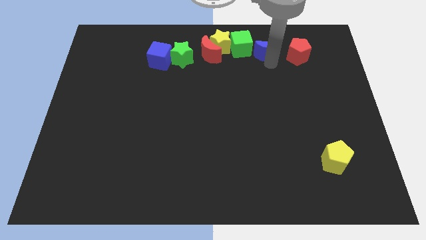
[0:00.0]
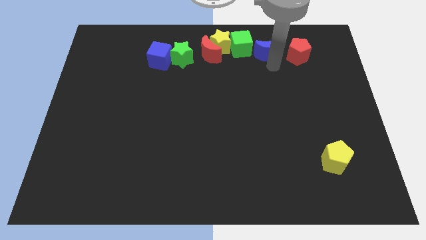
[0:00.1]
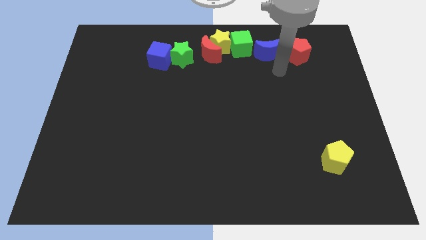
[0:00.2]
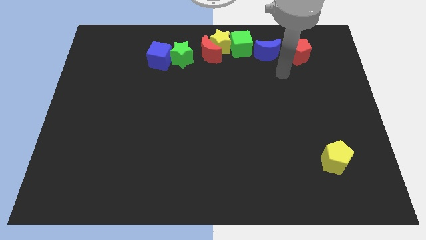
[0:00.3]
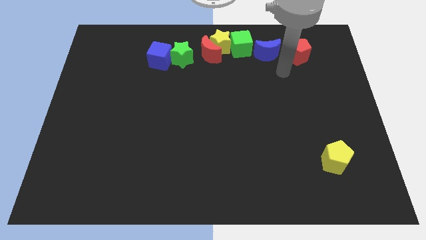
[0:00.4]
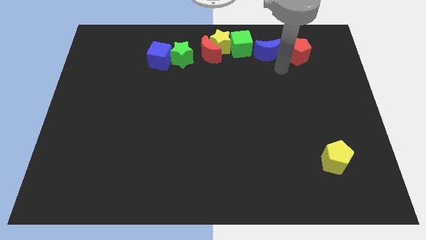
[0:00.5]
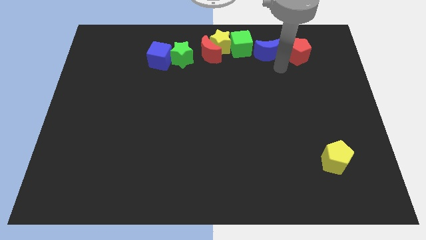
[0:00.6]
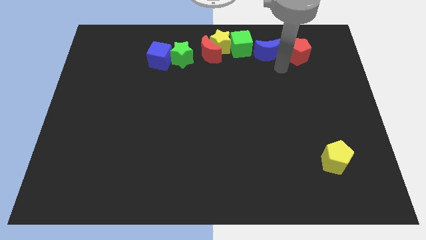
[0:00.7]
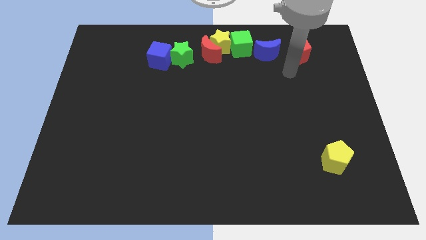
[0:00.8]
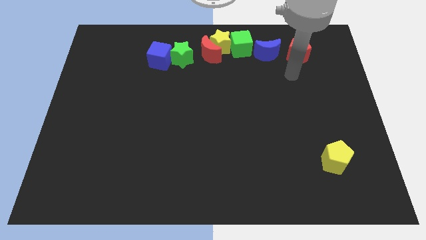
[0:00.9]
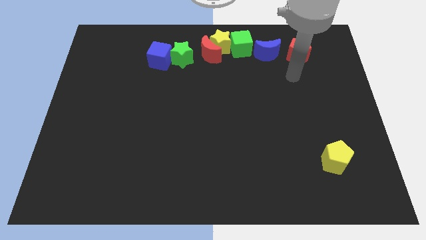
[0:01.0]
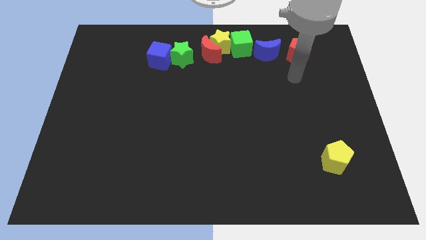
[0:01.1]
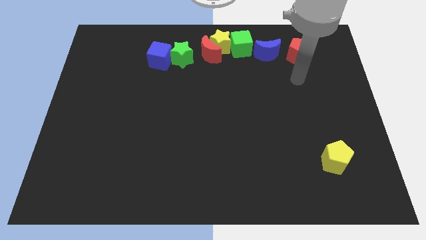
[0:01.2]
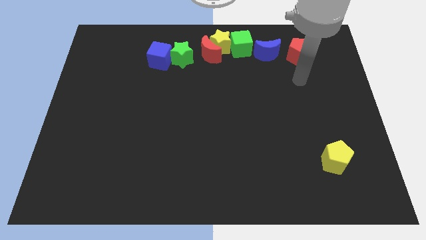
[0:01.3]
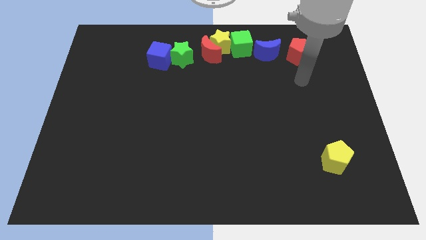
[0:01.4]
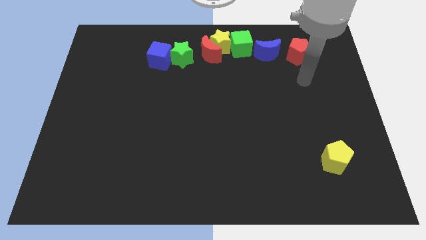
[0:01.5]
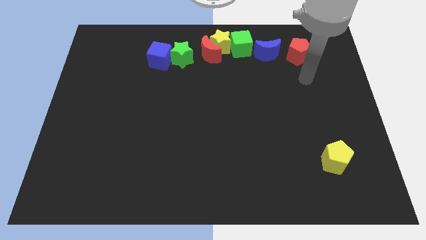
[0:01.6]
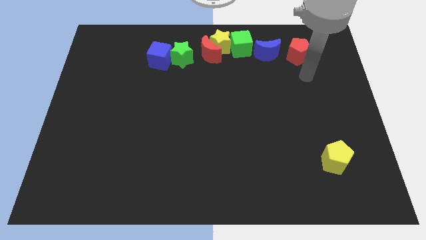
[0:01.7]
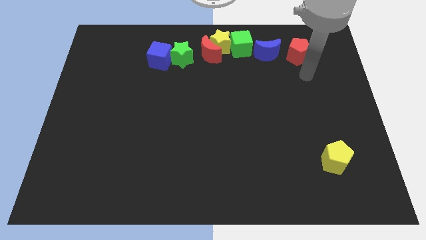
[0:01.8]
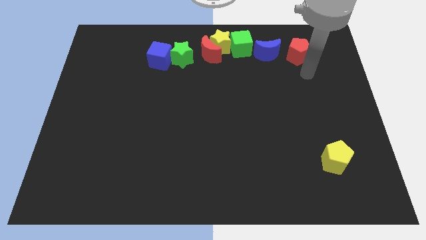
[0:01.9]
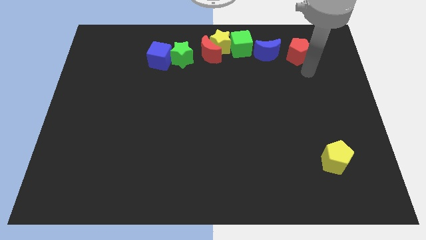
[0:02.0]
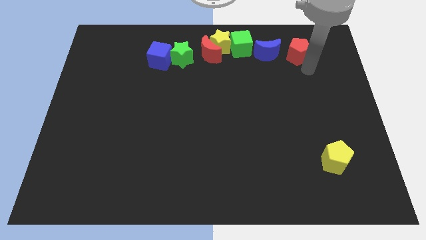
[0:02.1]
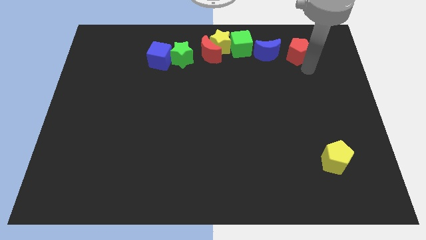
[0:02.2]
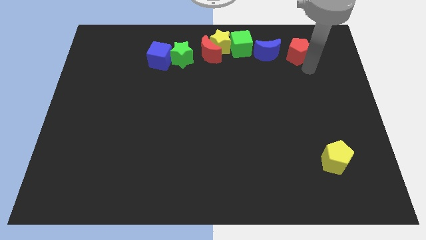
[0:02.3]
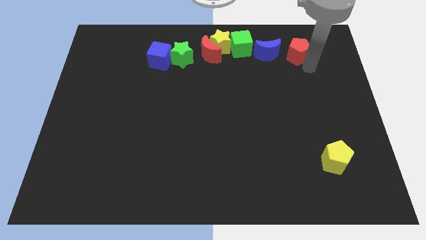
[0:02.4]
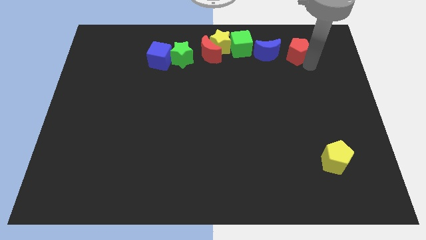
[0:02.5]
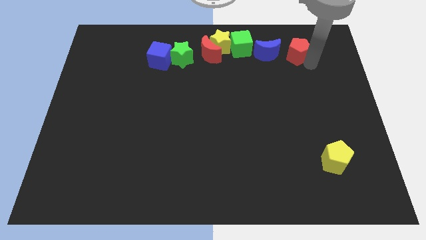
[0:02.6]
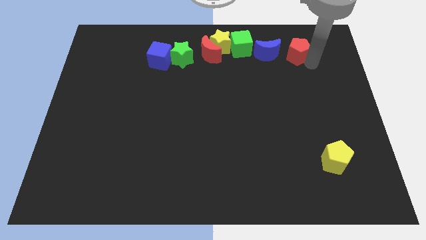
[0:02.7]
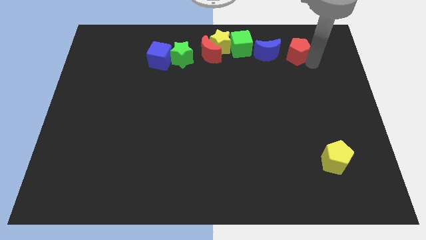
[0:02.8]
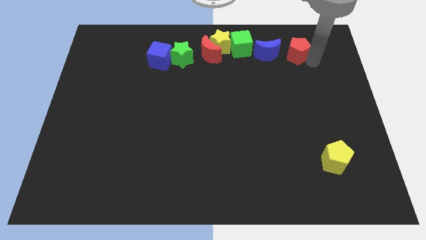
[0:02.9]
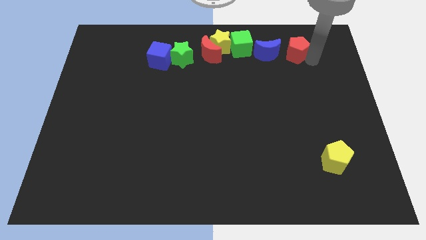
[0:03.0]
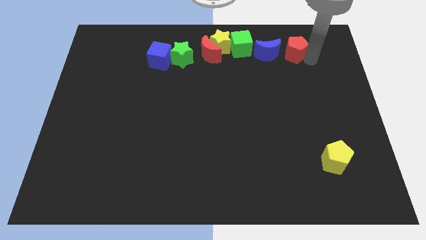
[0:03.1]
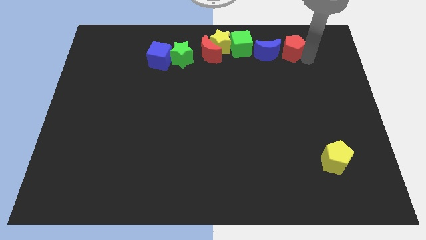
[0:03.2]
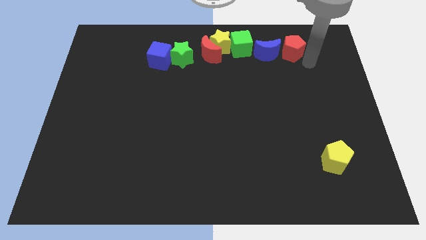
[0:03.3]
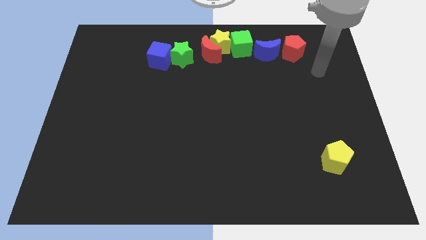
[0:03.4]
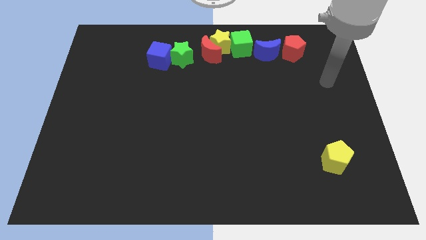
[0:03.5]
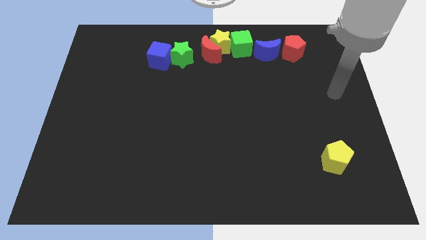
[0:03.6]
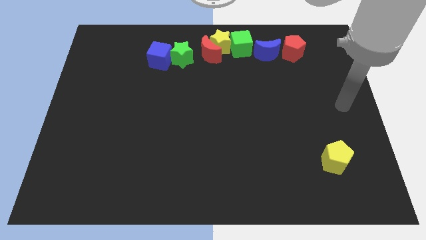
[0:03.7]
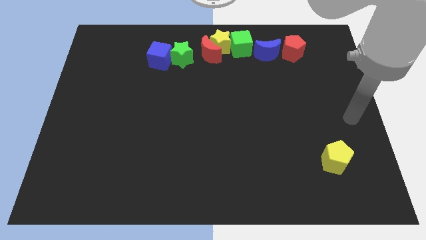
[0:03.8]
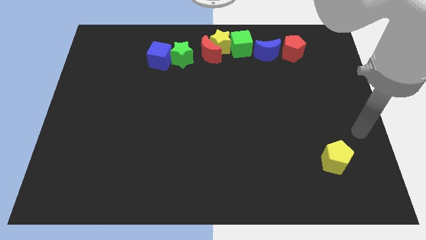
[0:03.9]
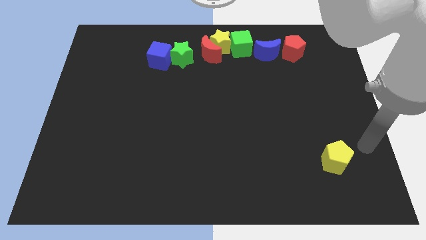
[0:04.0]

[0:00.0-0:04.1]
slightly move the red pentagon to the right of the blue crescent

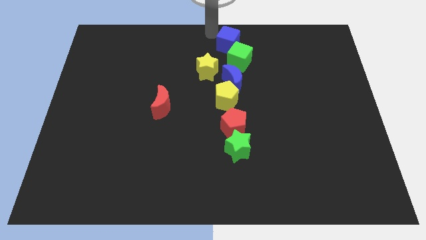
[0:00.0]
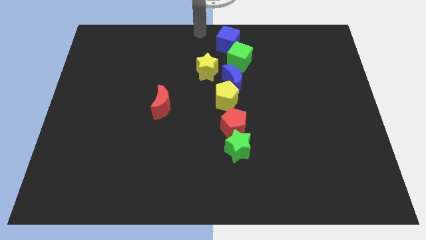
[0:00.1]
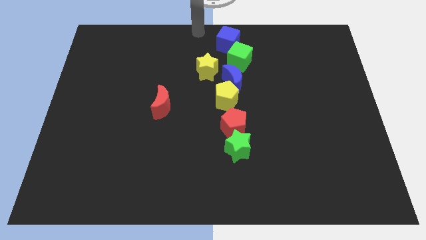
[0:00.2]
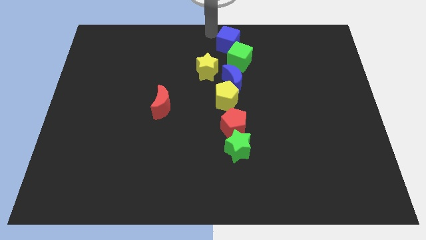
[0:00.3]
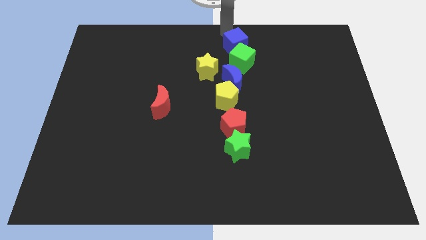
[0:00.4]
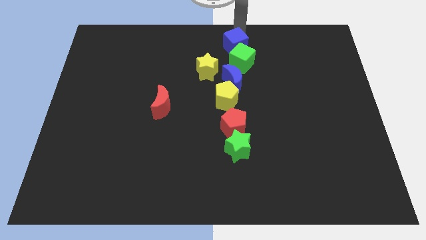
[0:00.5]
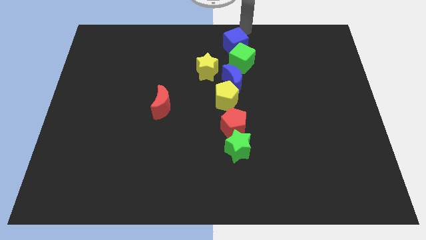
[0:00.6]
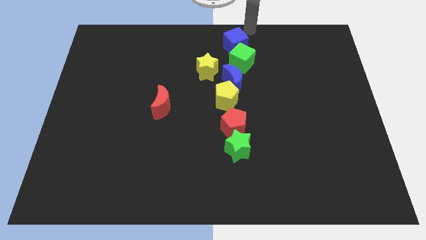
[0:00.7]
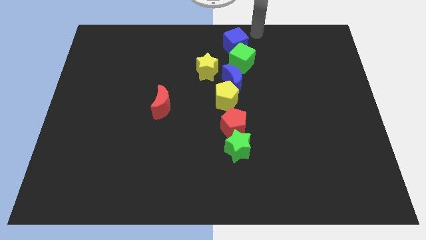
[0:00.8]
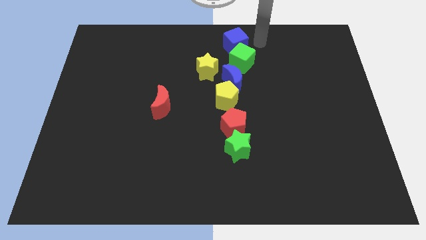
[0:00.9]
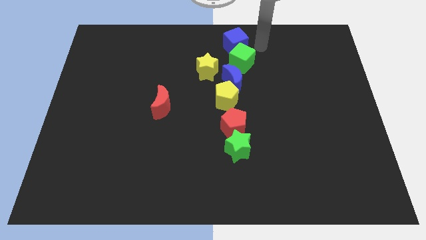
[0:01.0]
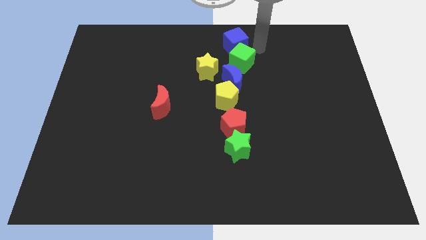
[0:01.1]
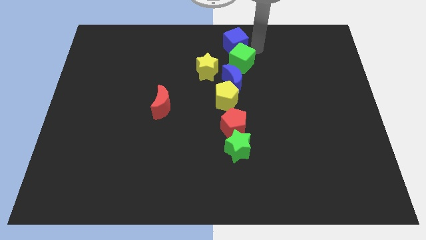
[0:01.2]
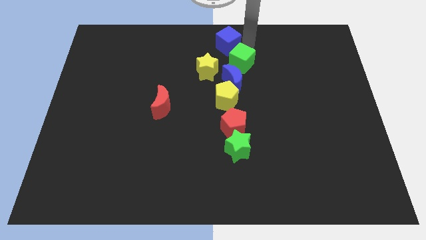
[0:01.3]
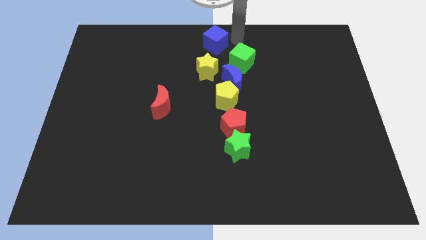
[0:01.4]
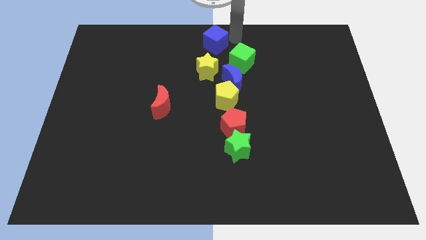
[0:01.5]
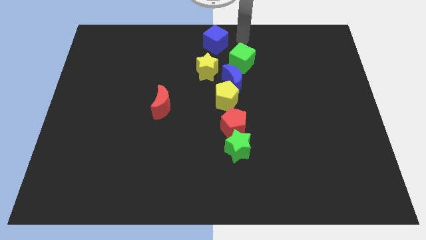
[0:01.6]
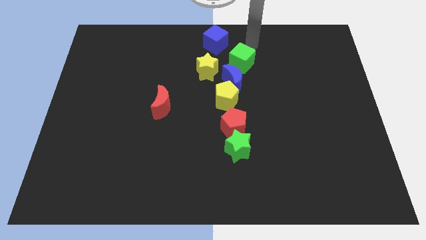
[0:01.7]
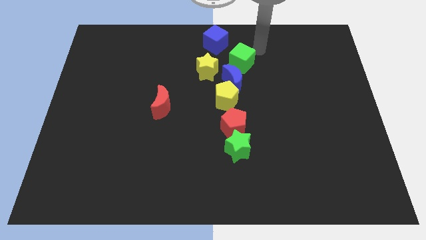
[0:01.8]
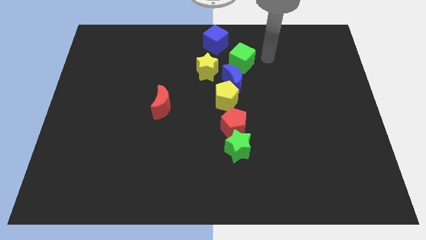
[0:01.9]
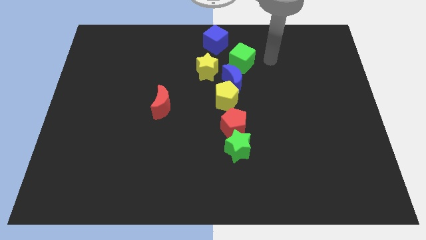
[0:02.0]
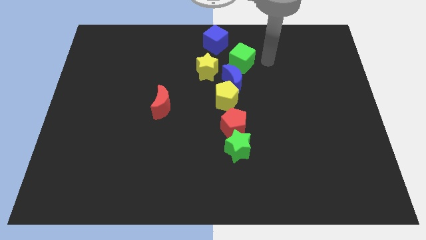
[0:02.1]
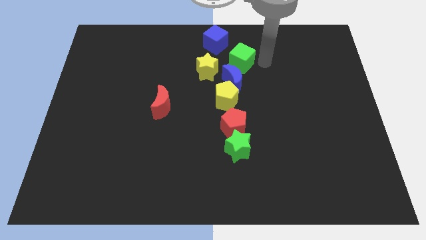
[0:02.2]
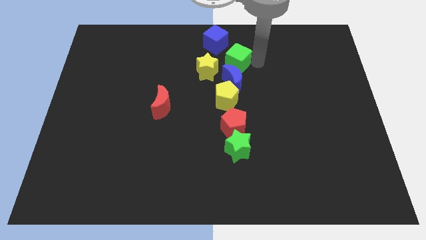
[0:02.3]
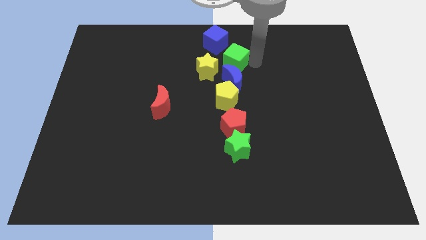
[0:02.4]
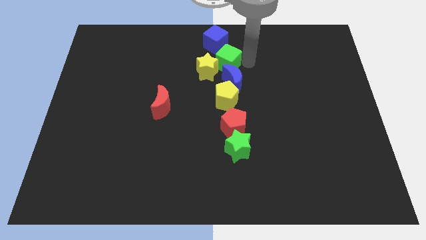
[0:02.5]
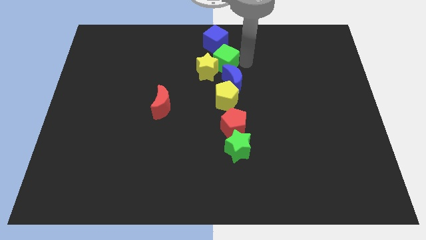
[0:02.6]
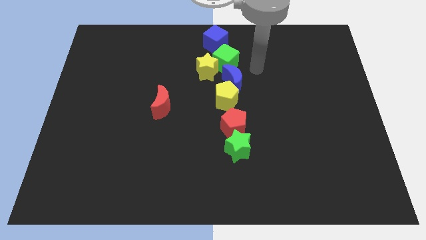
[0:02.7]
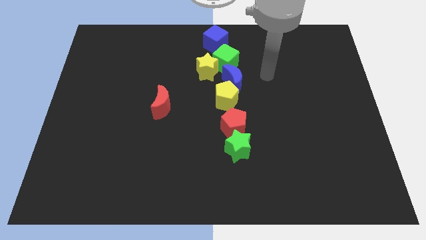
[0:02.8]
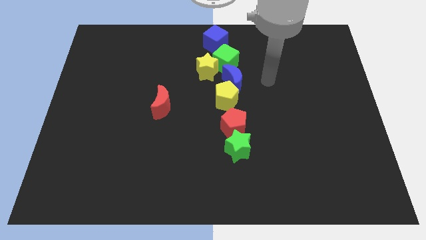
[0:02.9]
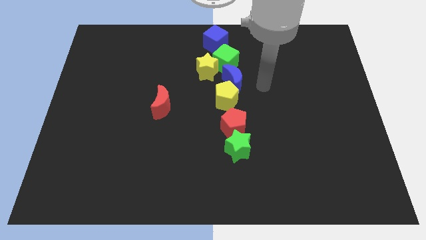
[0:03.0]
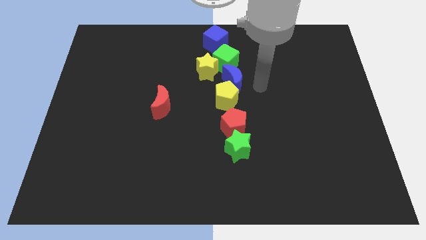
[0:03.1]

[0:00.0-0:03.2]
move the blue cube and the green cube to the left slightly

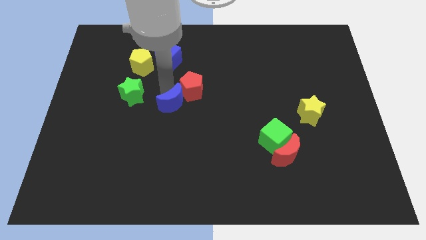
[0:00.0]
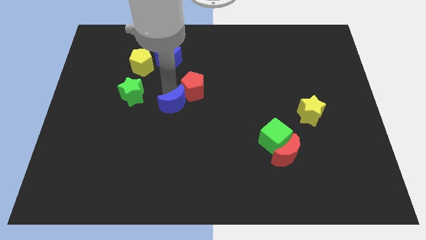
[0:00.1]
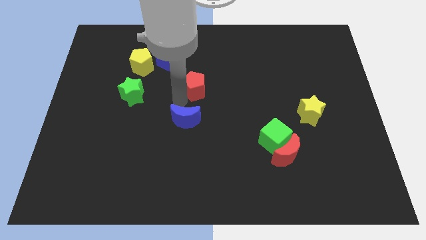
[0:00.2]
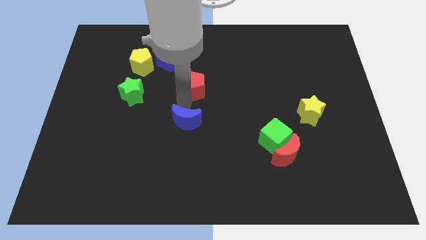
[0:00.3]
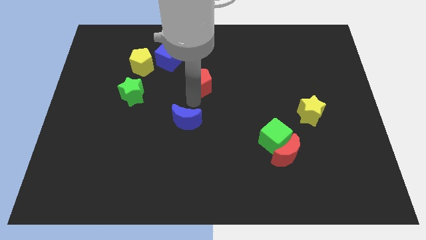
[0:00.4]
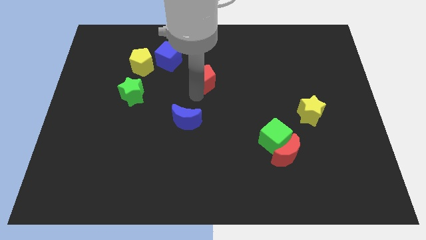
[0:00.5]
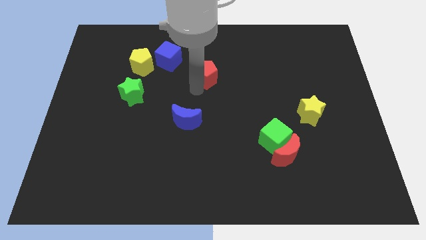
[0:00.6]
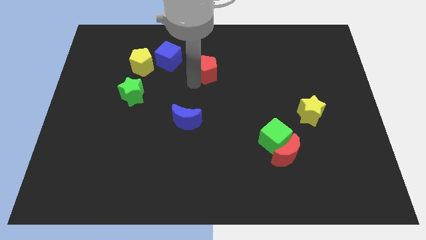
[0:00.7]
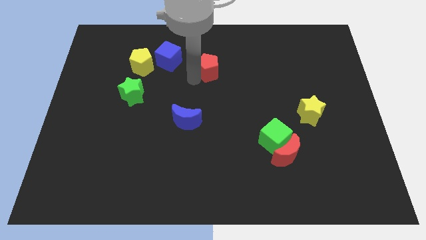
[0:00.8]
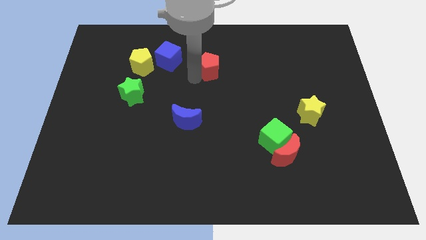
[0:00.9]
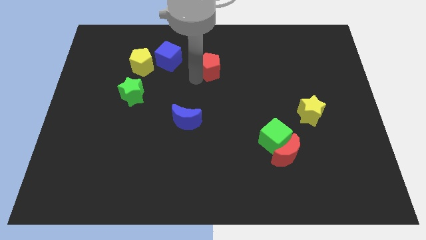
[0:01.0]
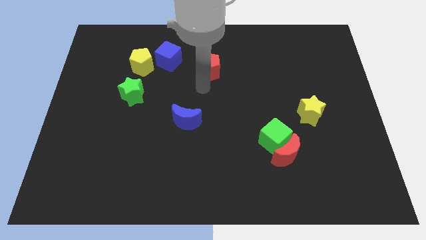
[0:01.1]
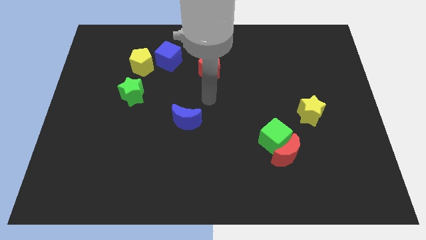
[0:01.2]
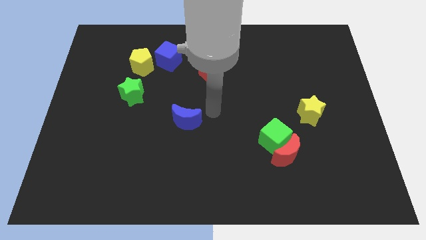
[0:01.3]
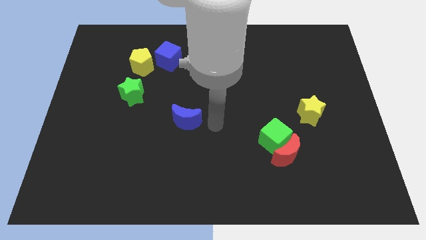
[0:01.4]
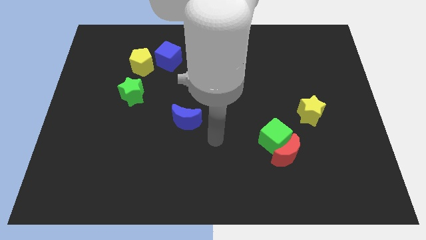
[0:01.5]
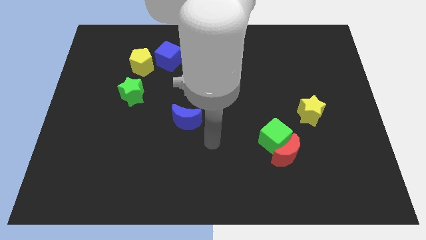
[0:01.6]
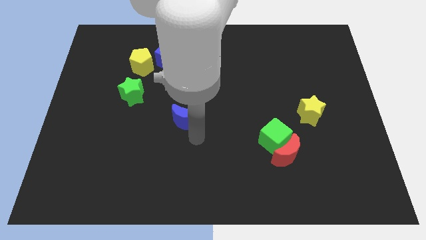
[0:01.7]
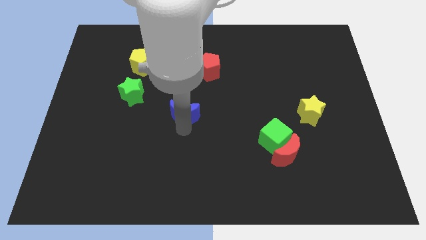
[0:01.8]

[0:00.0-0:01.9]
move red pentagon towards the blue cube
